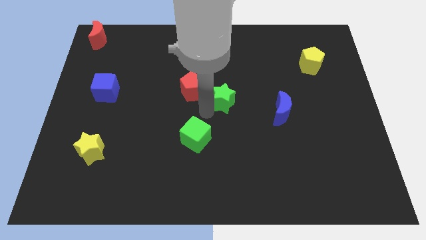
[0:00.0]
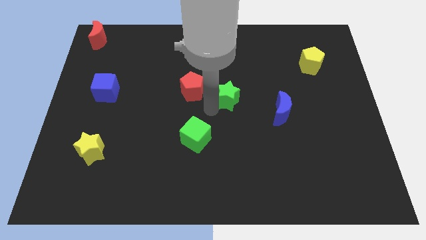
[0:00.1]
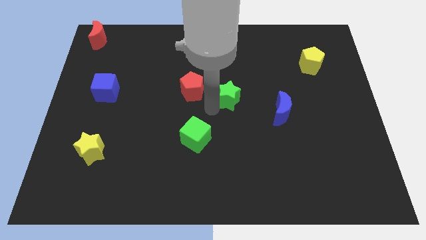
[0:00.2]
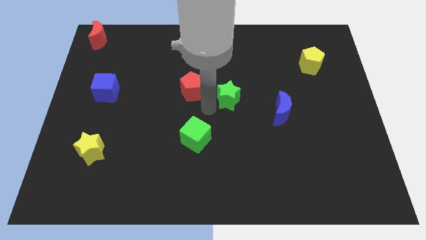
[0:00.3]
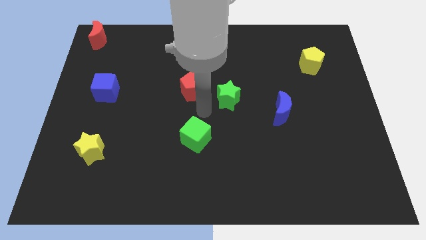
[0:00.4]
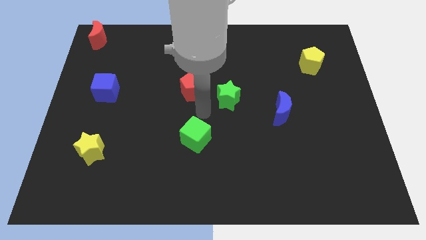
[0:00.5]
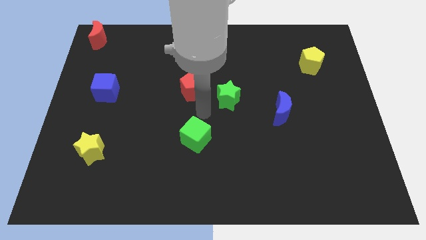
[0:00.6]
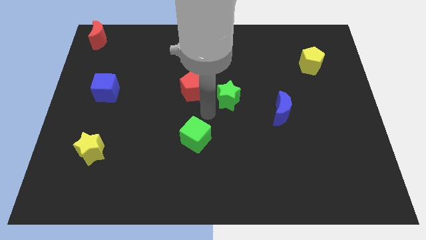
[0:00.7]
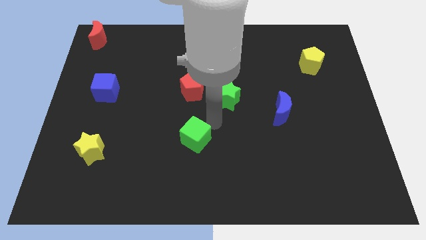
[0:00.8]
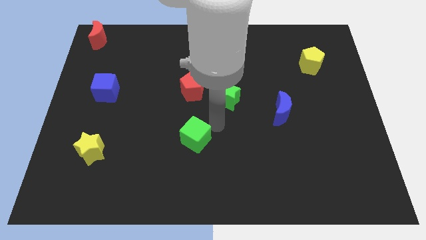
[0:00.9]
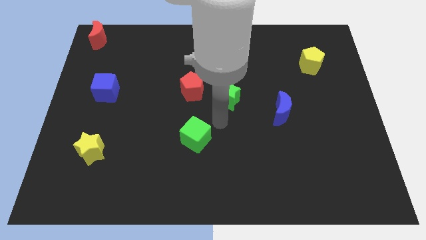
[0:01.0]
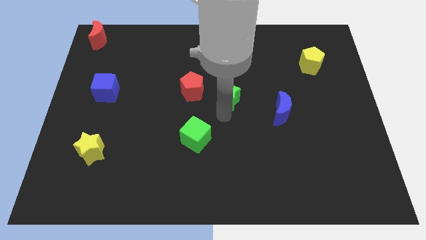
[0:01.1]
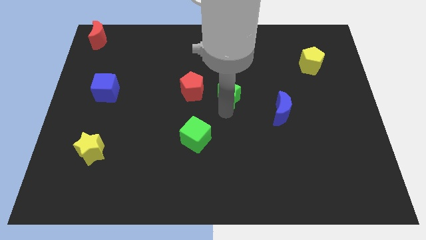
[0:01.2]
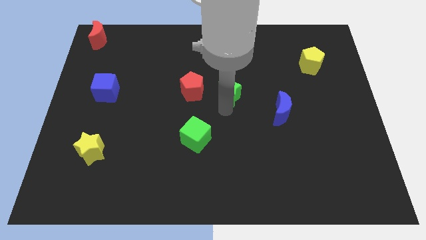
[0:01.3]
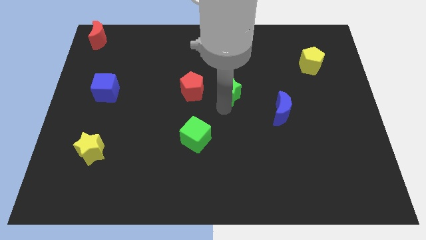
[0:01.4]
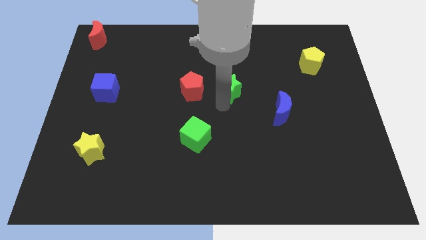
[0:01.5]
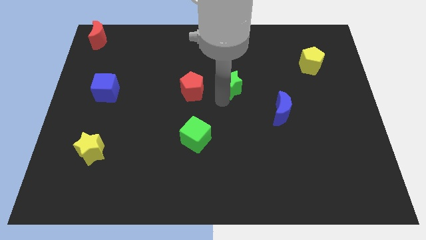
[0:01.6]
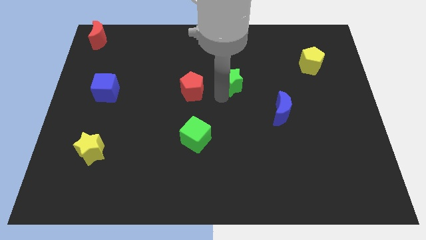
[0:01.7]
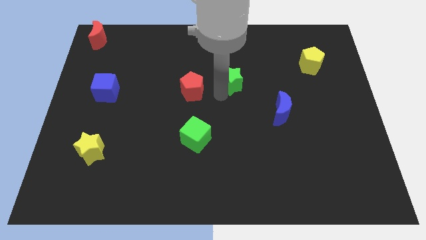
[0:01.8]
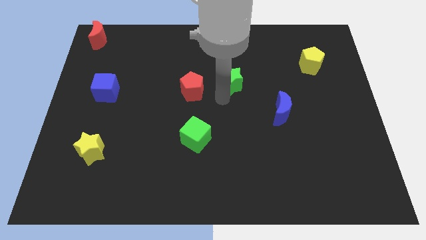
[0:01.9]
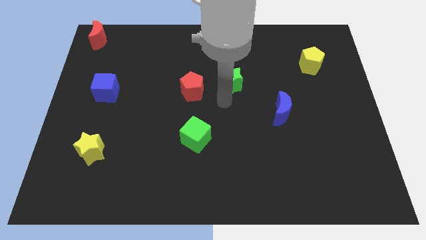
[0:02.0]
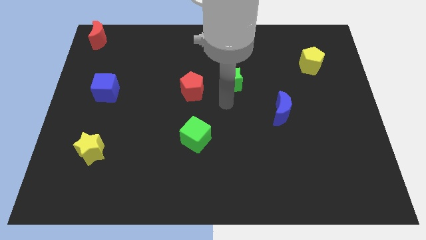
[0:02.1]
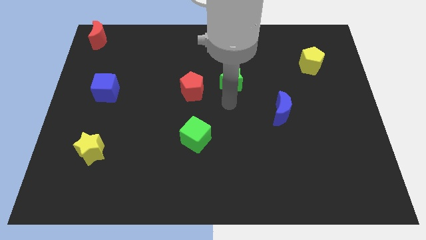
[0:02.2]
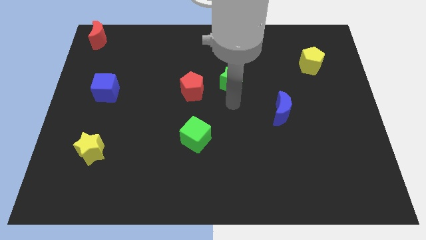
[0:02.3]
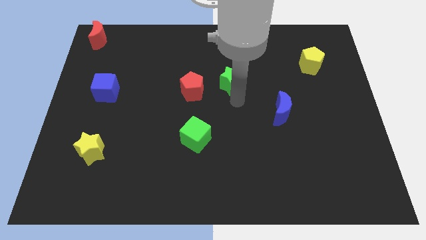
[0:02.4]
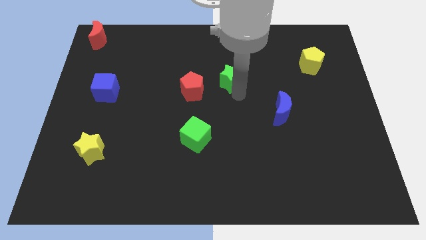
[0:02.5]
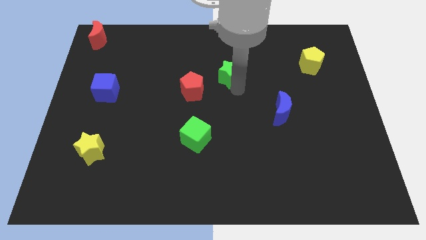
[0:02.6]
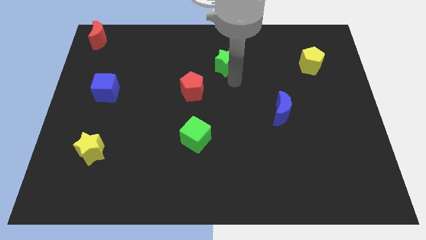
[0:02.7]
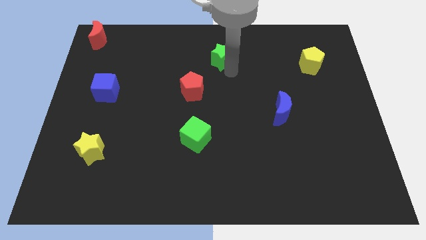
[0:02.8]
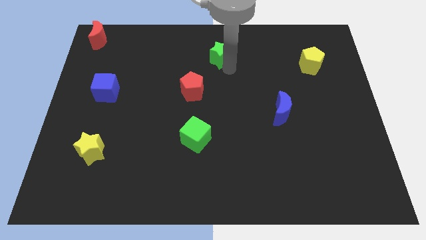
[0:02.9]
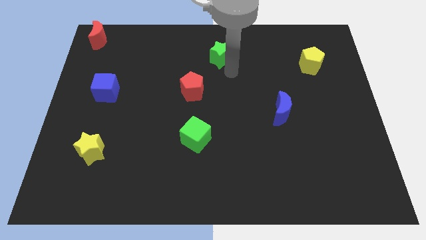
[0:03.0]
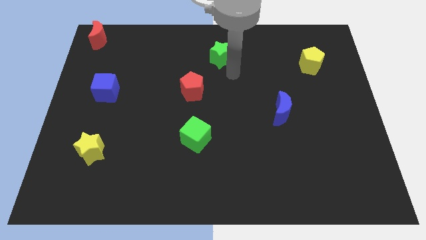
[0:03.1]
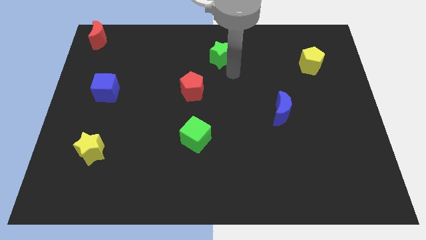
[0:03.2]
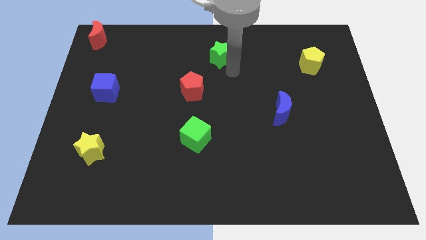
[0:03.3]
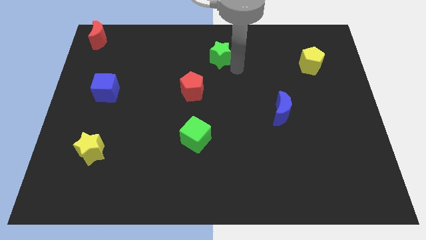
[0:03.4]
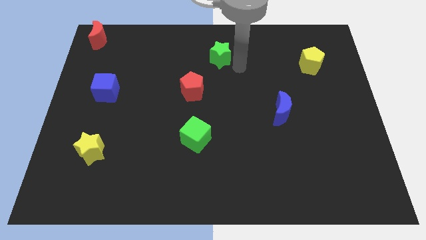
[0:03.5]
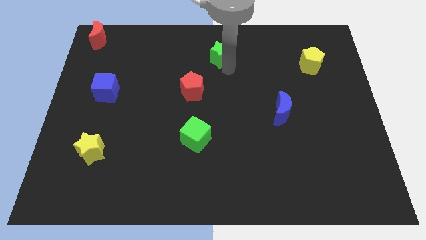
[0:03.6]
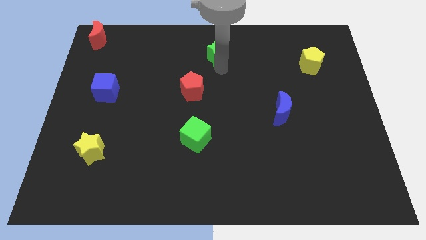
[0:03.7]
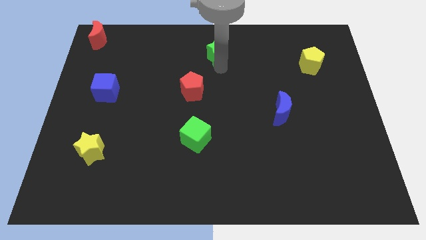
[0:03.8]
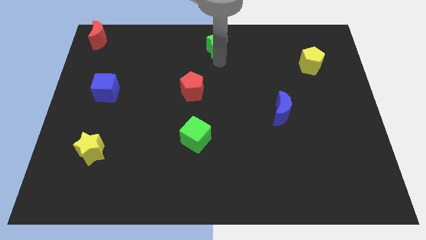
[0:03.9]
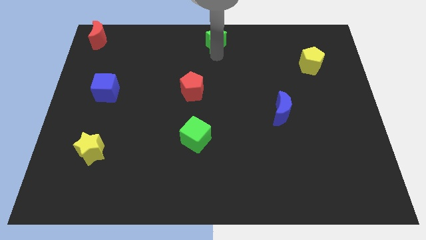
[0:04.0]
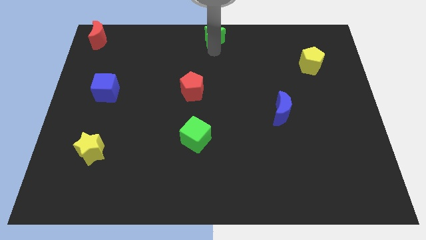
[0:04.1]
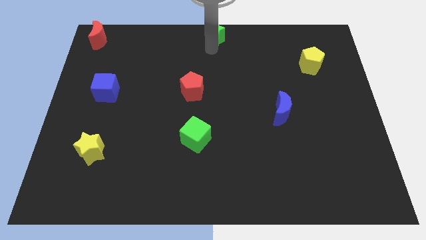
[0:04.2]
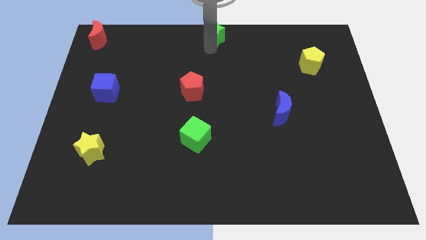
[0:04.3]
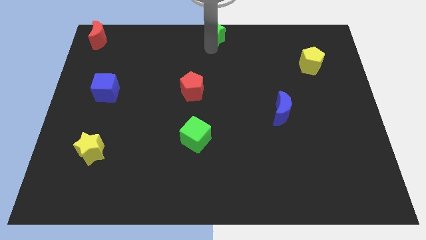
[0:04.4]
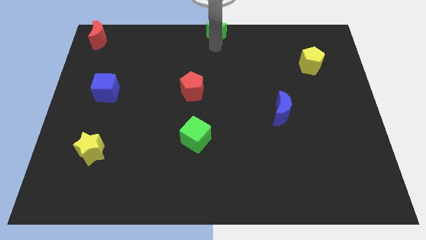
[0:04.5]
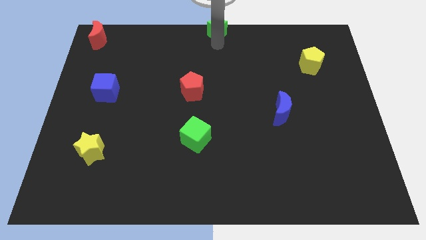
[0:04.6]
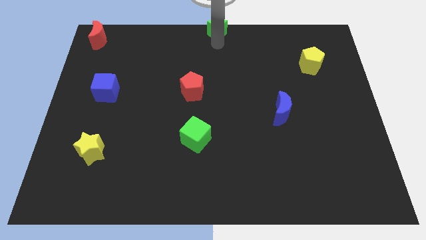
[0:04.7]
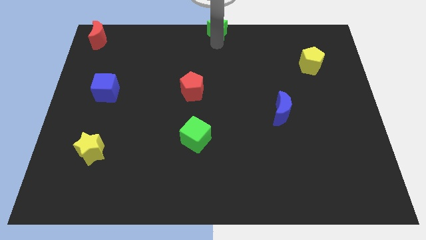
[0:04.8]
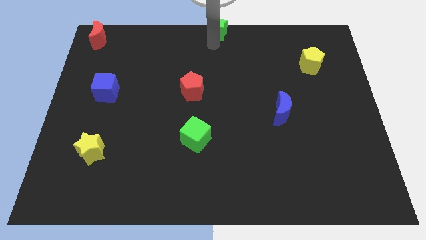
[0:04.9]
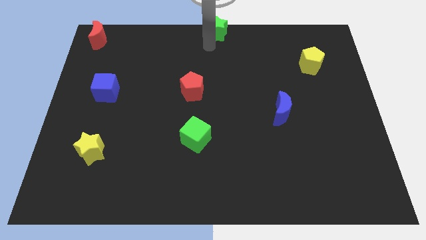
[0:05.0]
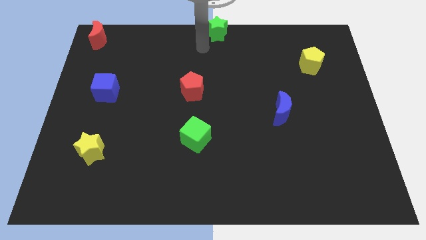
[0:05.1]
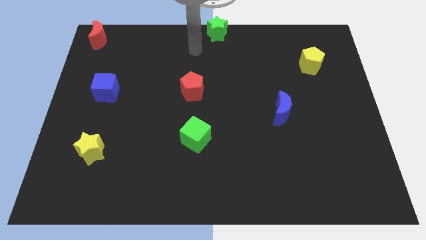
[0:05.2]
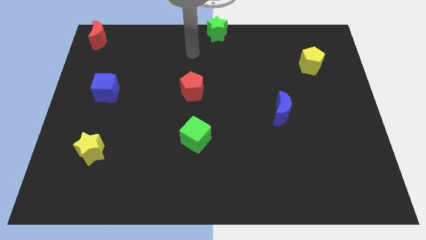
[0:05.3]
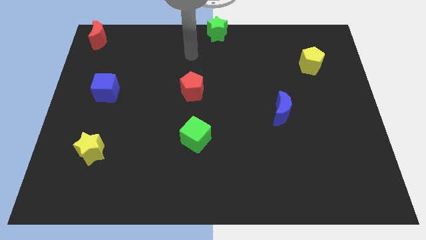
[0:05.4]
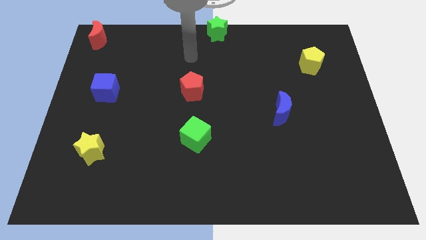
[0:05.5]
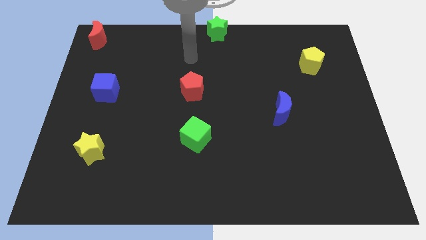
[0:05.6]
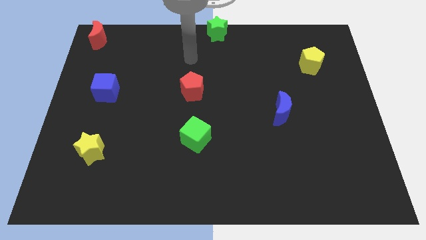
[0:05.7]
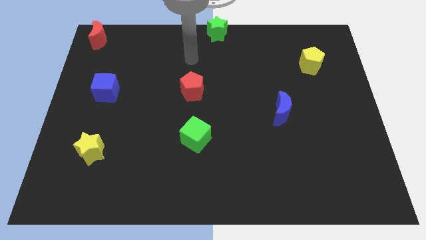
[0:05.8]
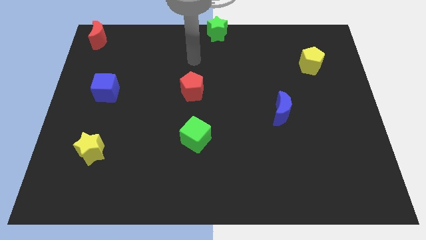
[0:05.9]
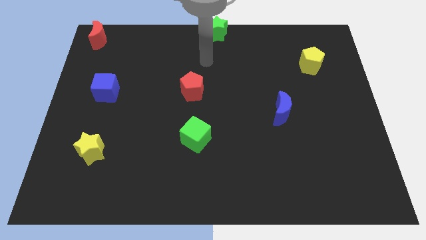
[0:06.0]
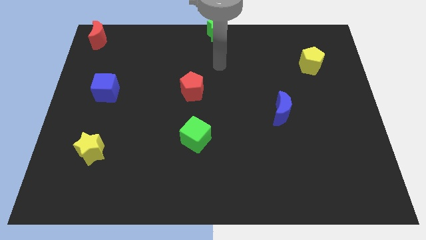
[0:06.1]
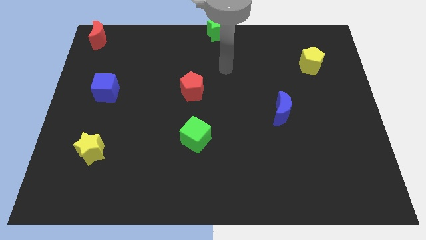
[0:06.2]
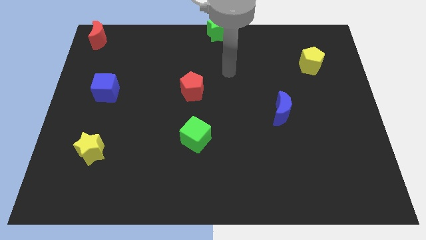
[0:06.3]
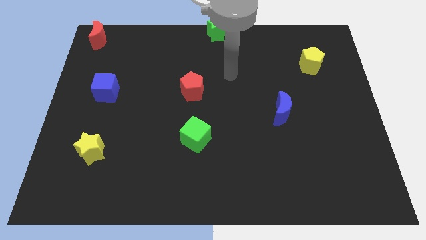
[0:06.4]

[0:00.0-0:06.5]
move the green star into the top center of the board

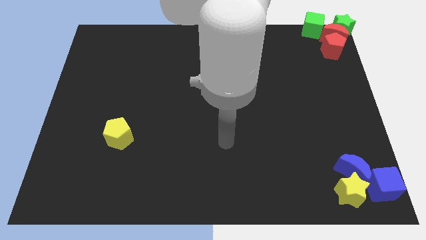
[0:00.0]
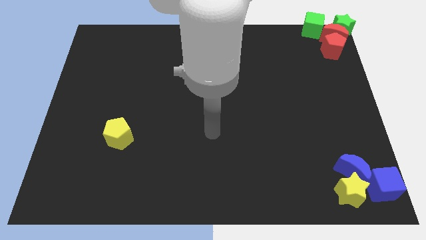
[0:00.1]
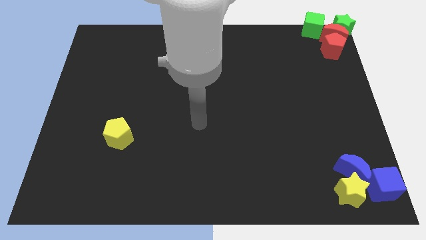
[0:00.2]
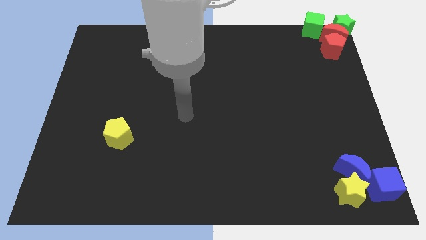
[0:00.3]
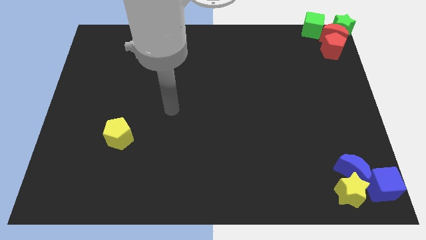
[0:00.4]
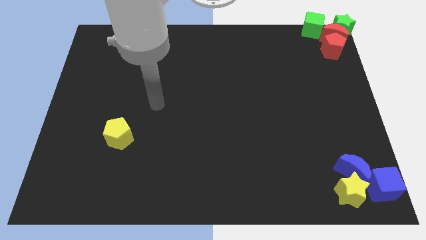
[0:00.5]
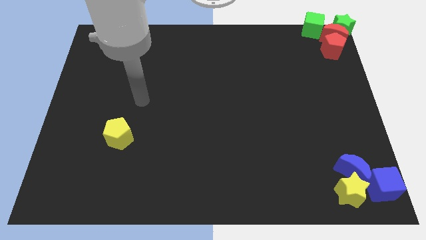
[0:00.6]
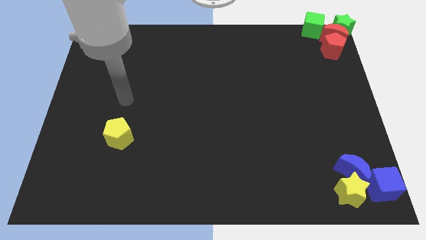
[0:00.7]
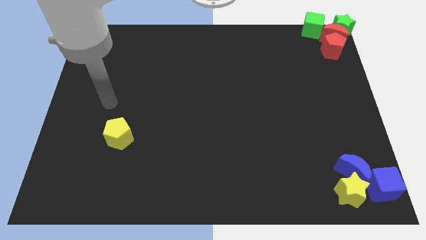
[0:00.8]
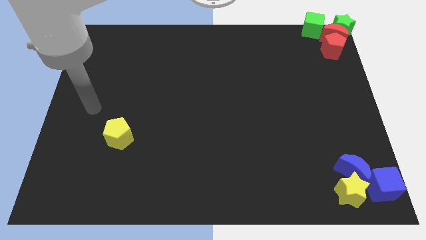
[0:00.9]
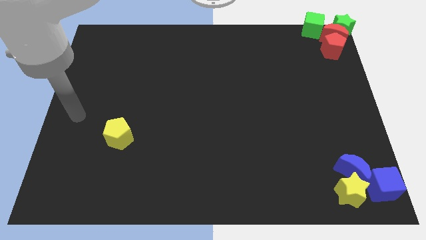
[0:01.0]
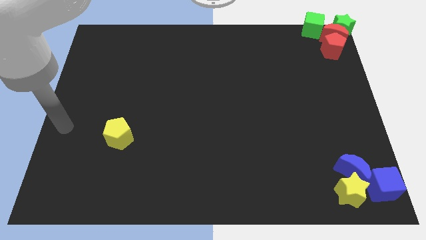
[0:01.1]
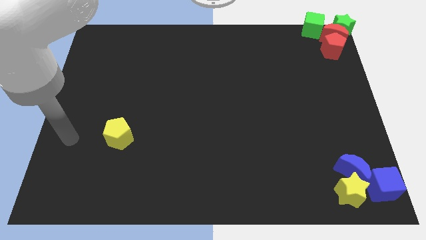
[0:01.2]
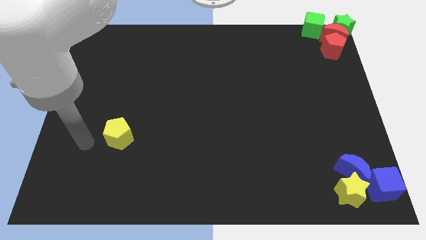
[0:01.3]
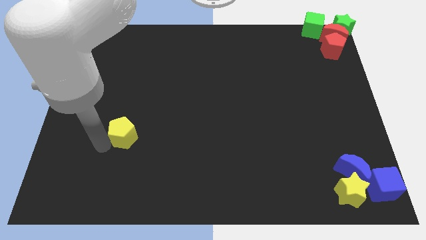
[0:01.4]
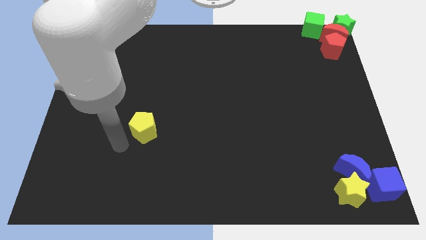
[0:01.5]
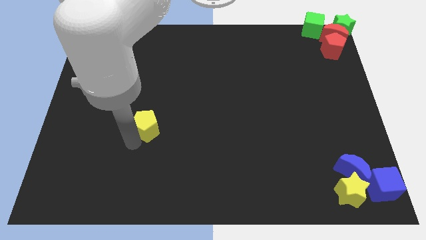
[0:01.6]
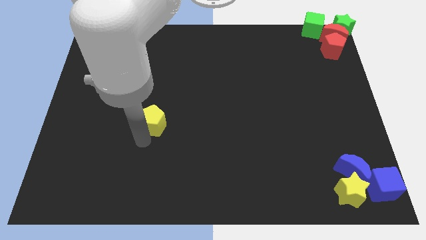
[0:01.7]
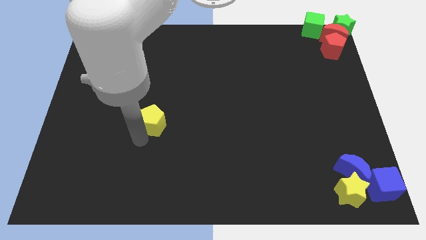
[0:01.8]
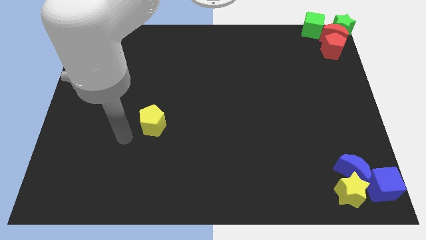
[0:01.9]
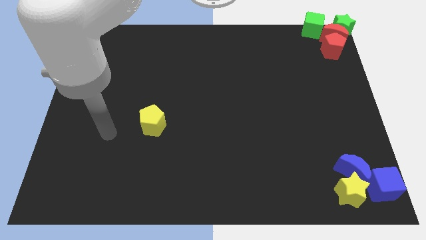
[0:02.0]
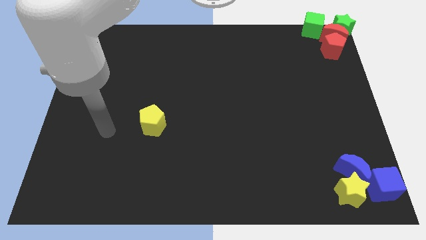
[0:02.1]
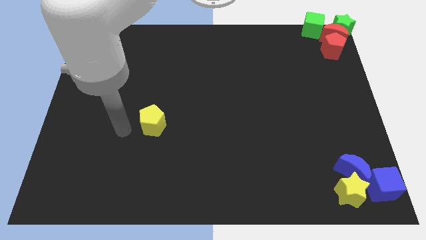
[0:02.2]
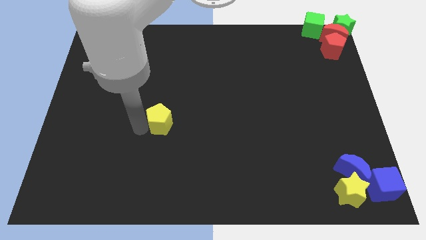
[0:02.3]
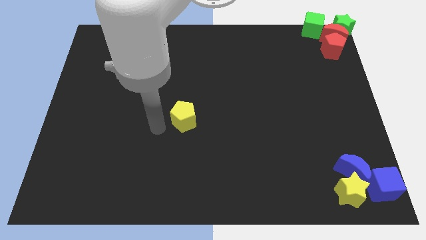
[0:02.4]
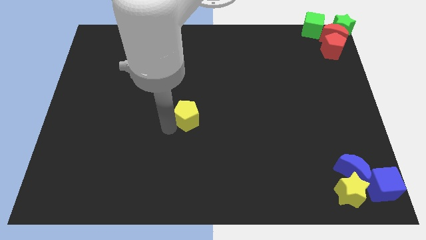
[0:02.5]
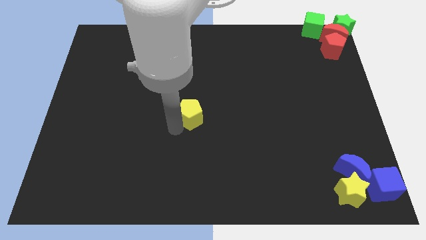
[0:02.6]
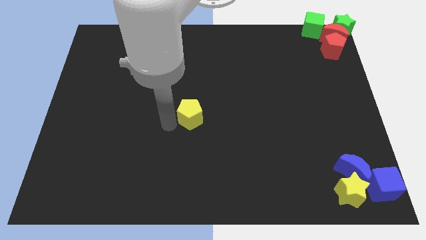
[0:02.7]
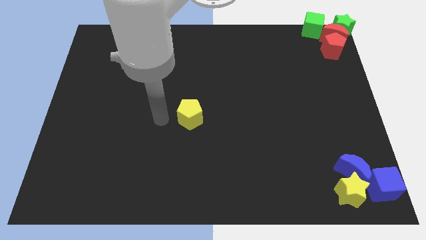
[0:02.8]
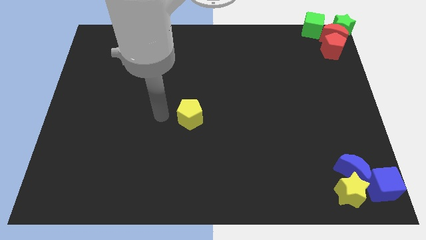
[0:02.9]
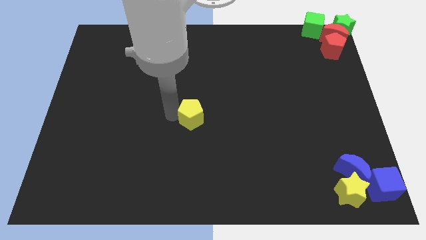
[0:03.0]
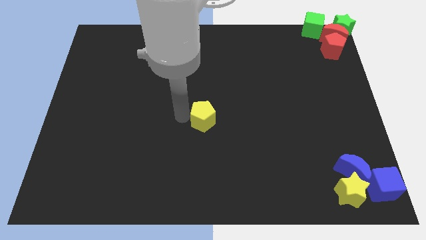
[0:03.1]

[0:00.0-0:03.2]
push the yellow pentagon to center of the board
